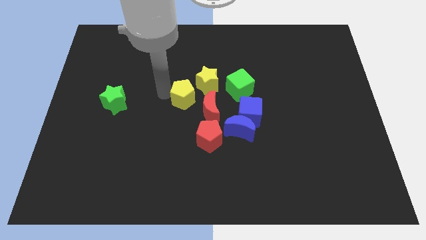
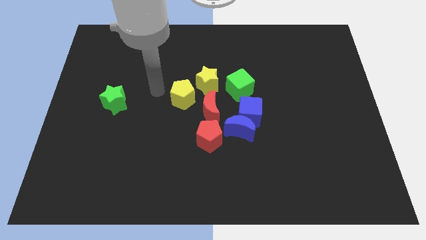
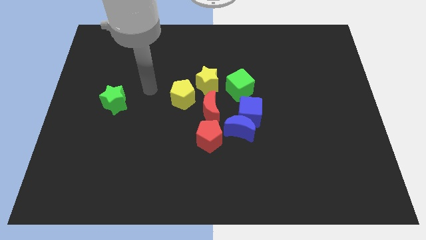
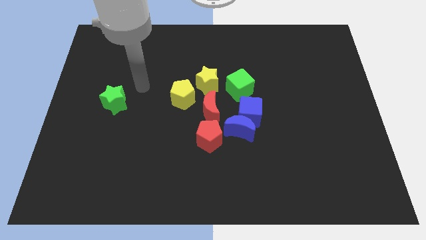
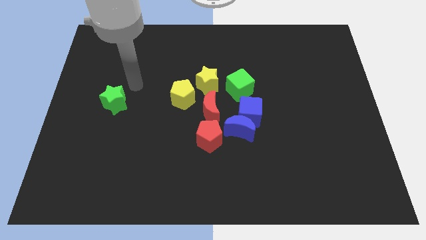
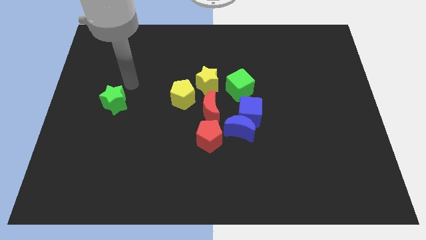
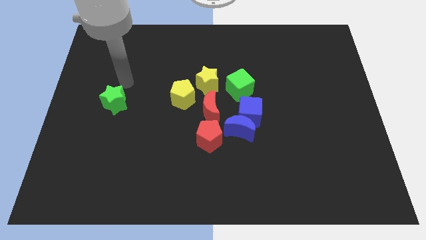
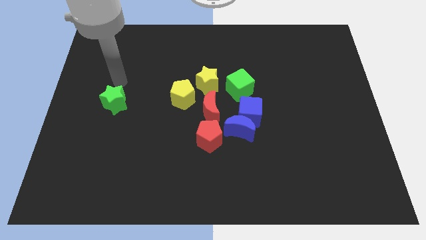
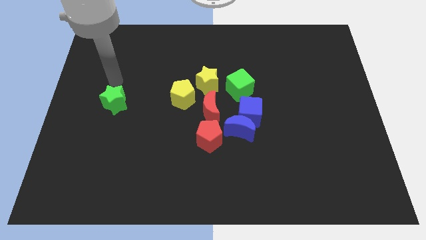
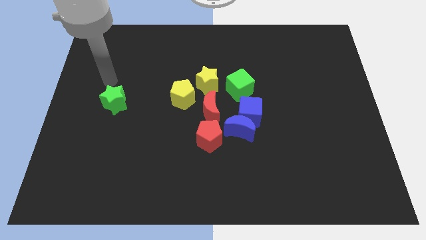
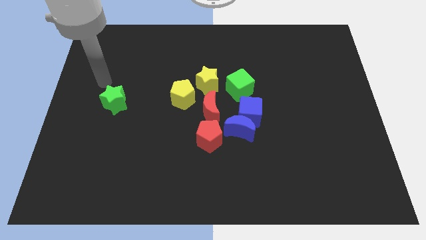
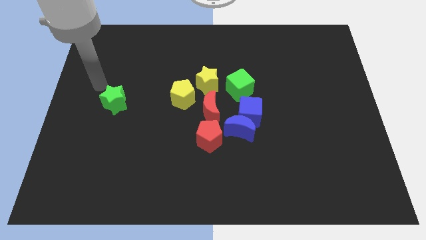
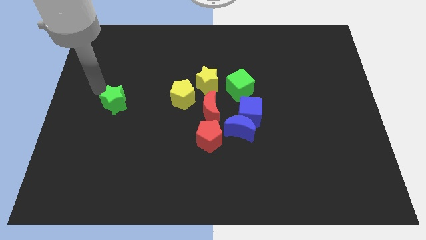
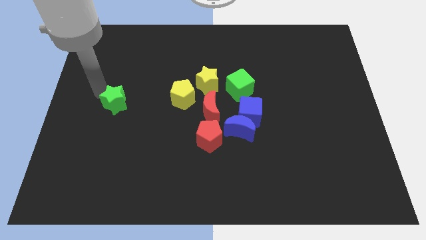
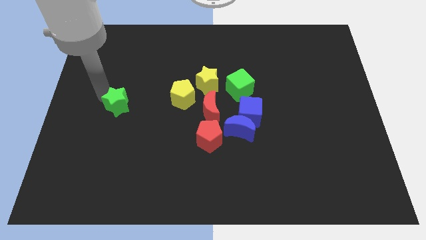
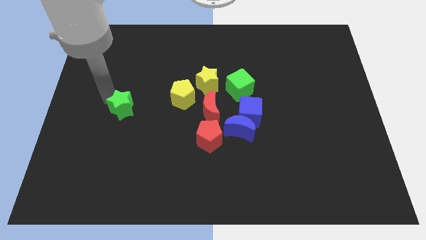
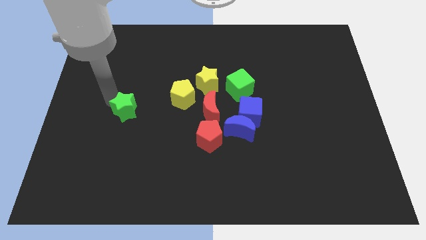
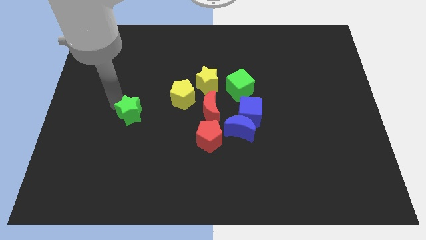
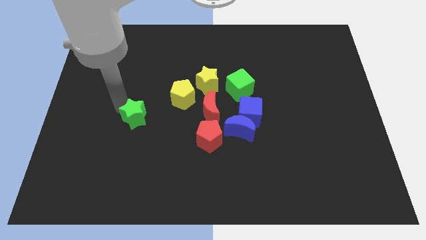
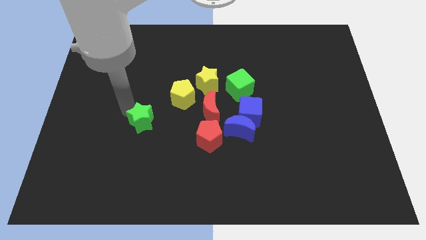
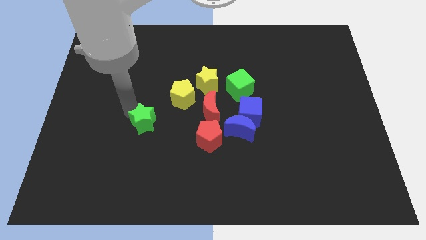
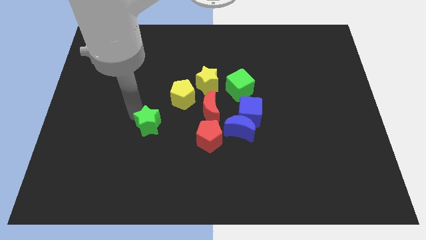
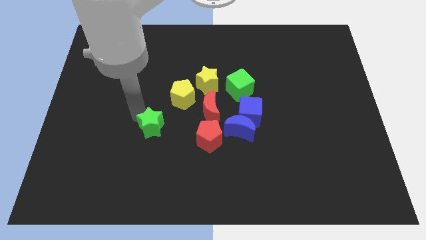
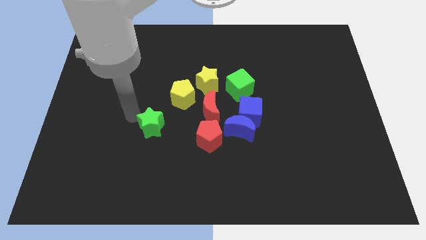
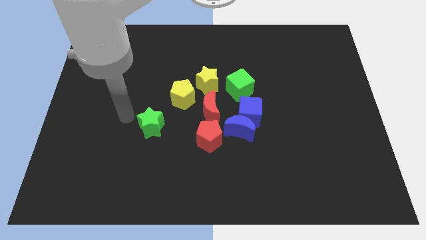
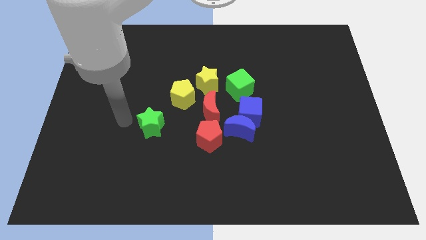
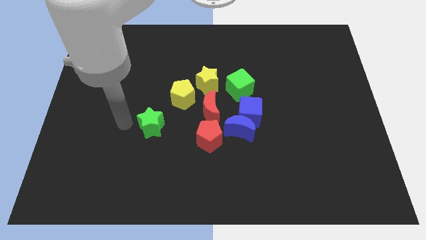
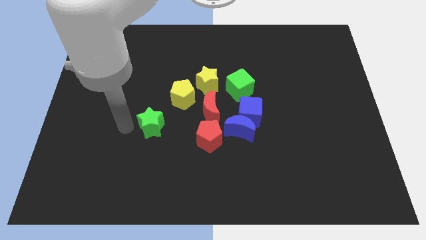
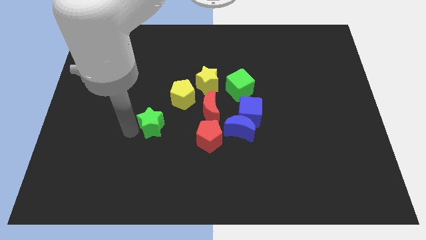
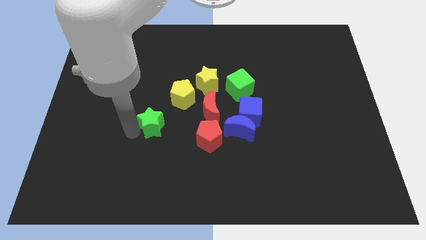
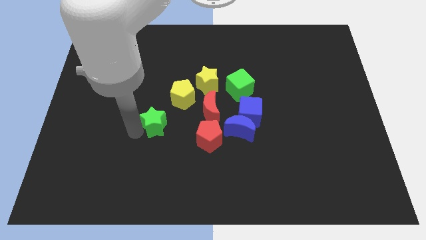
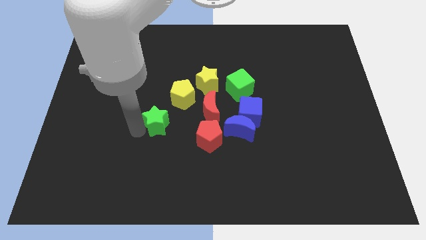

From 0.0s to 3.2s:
move the green star towards the yellow pentagon

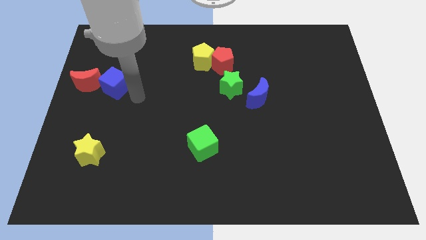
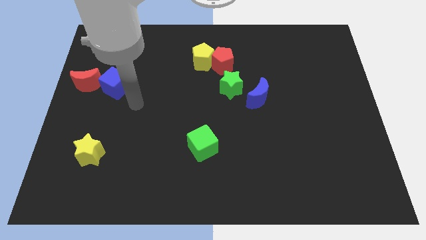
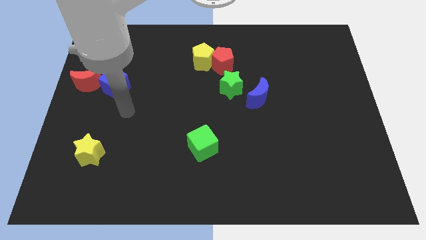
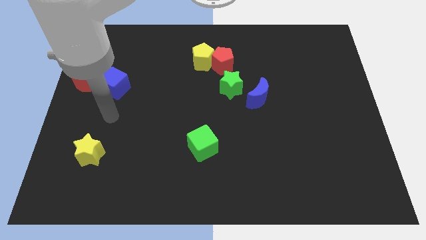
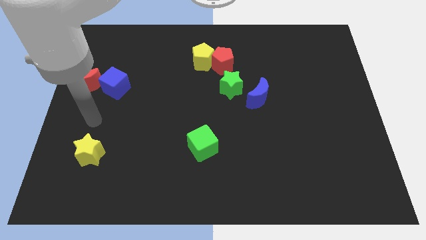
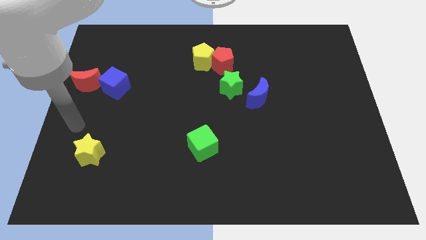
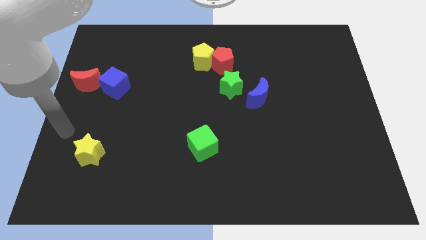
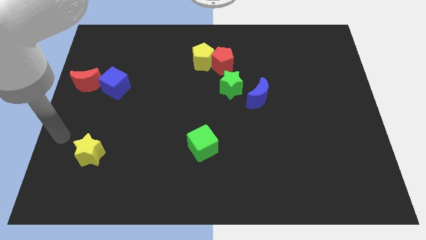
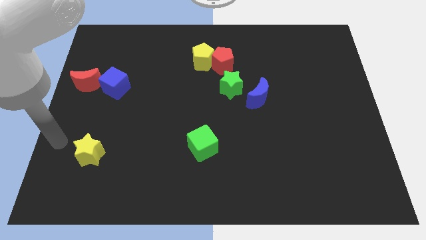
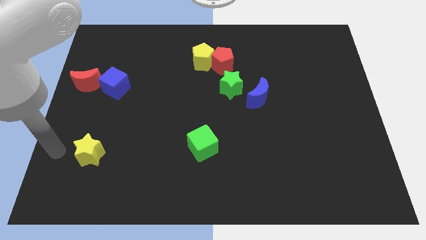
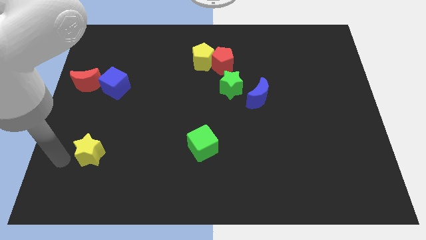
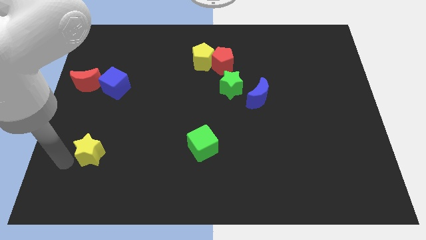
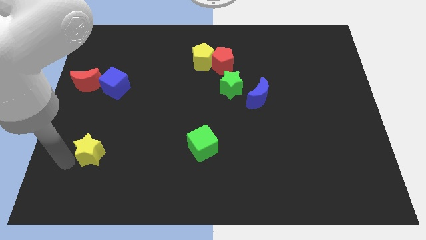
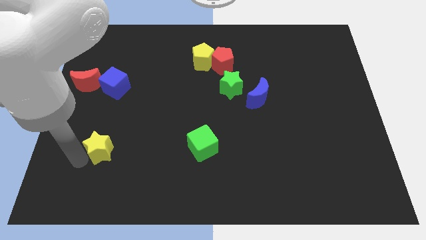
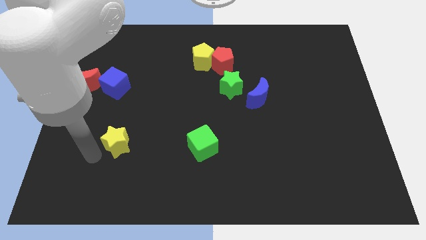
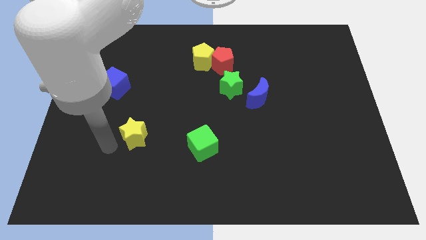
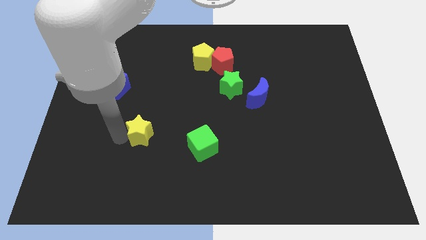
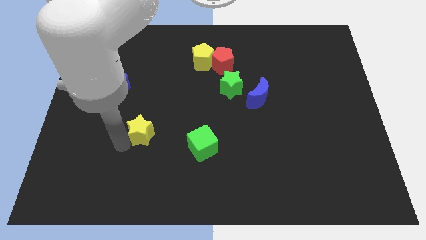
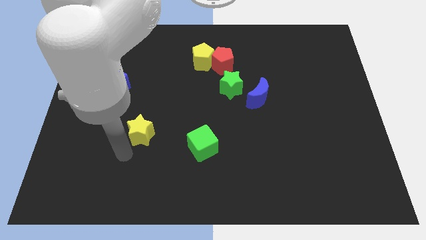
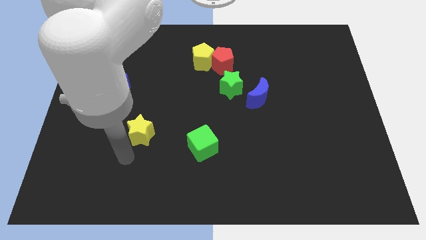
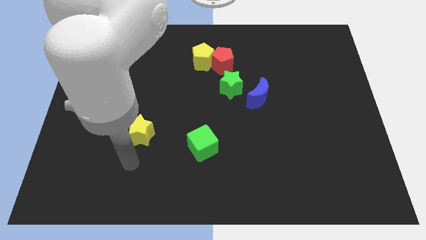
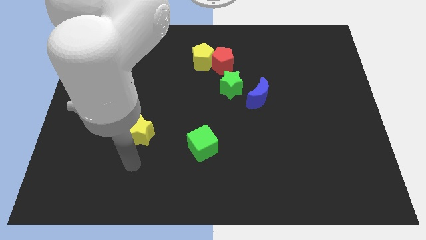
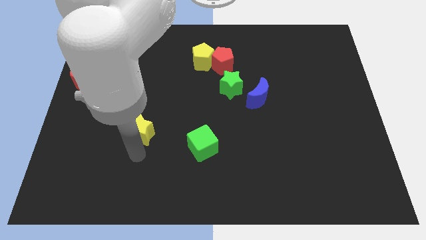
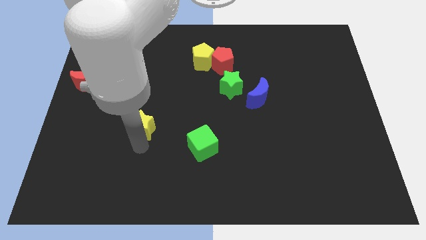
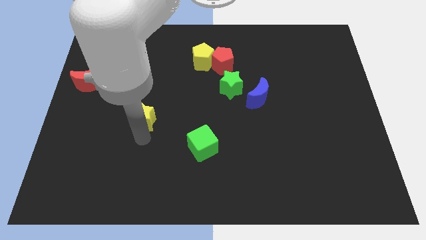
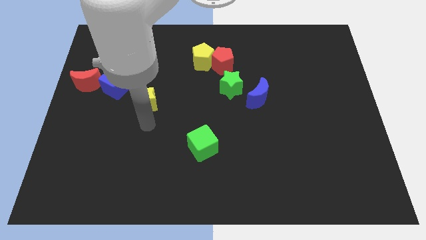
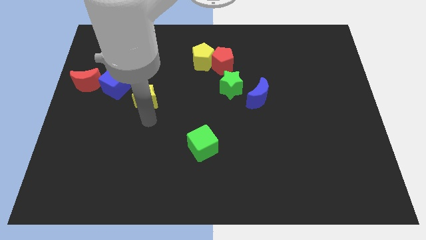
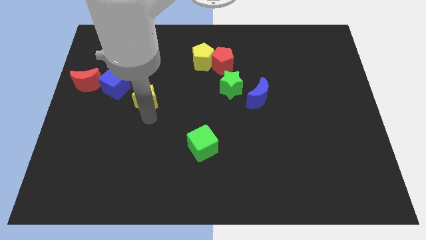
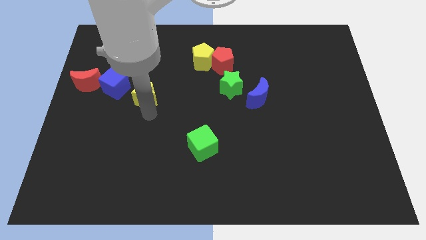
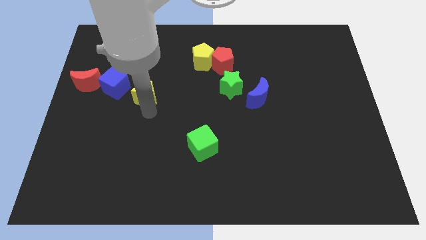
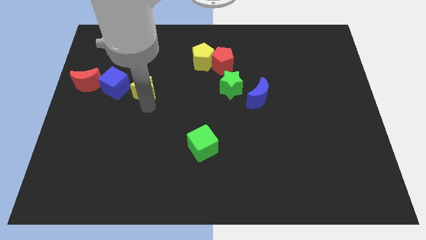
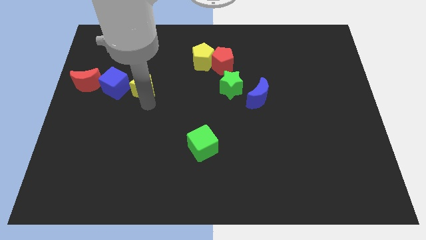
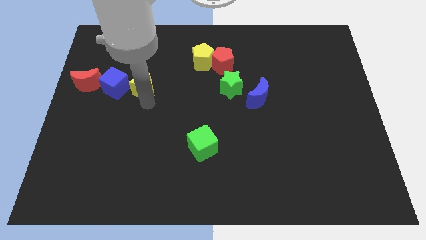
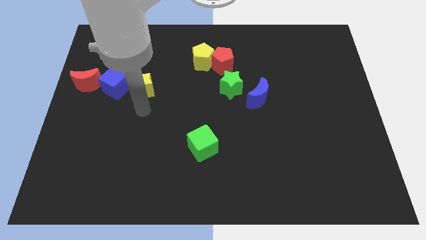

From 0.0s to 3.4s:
place yellow star beside blue cube

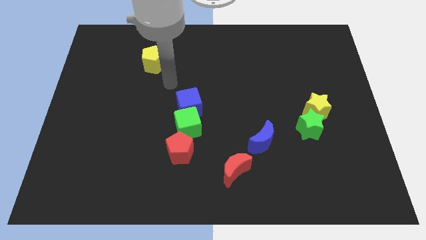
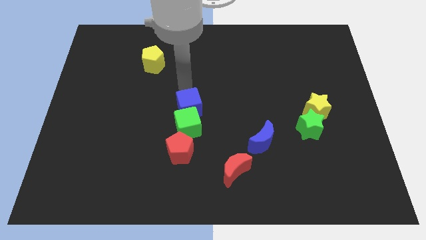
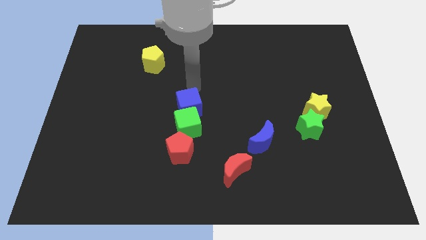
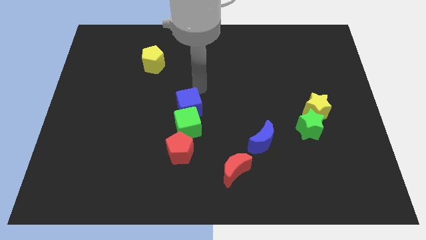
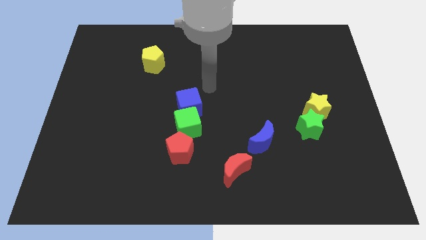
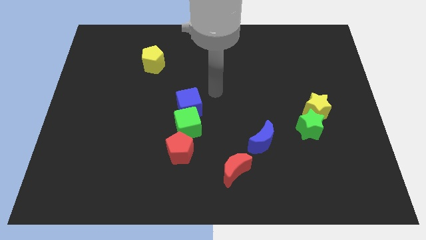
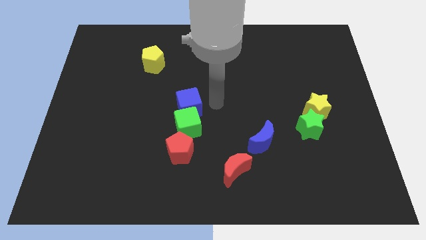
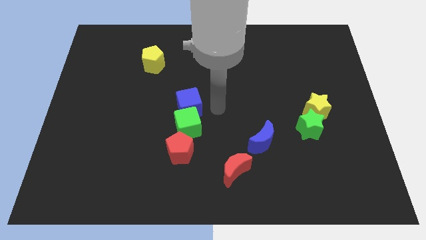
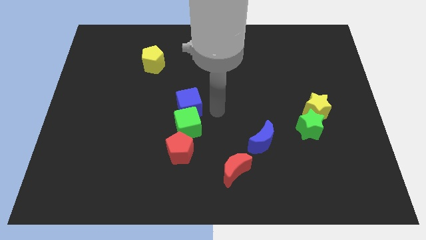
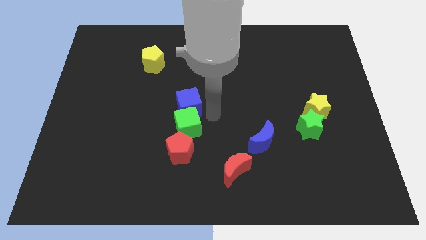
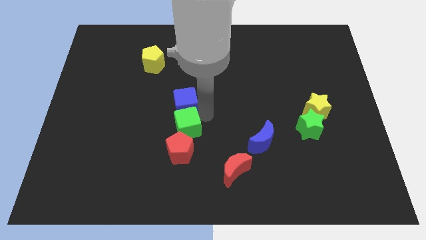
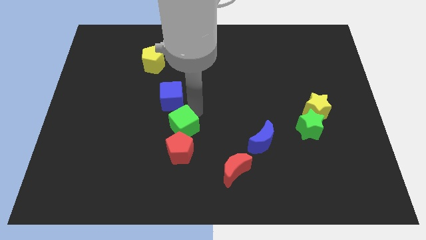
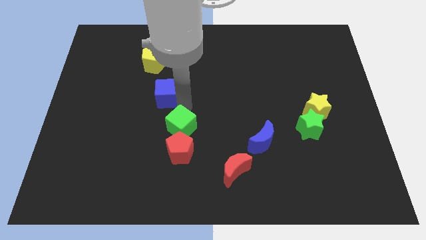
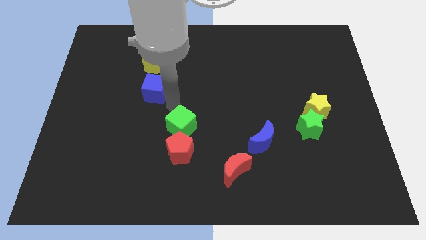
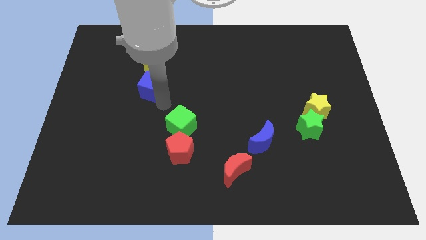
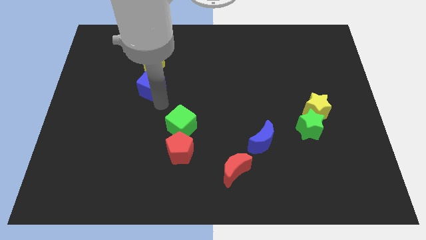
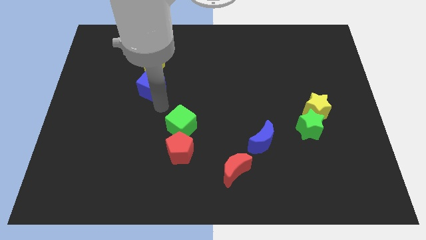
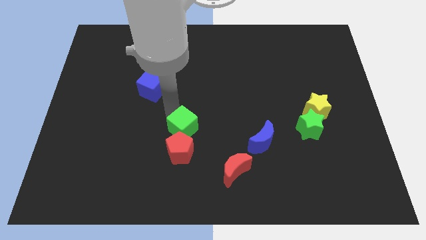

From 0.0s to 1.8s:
separate the blue cube from the green cube

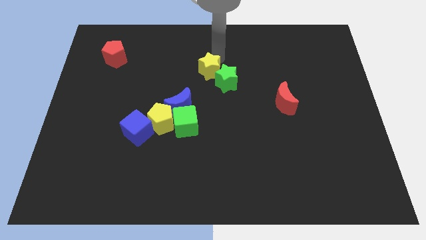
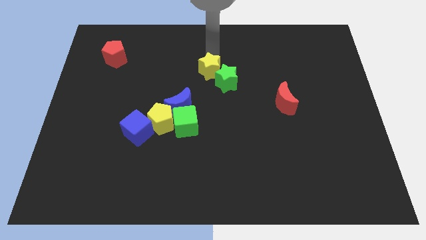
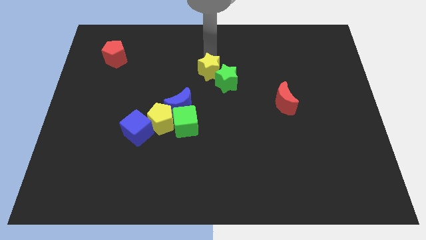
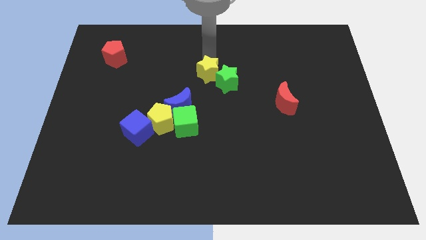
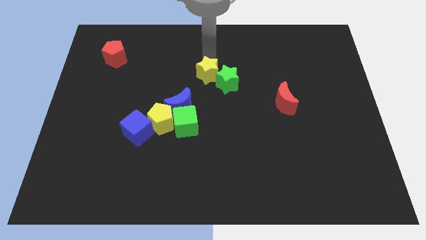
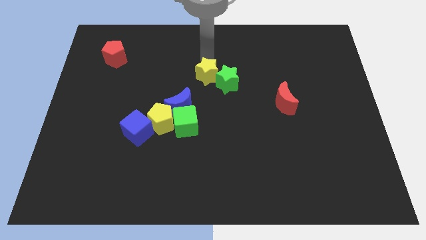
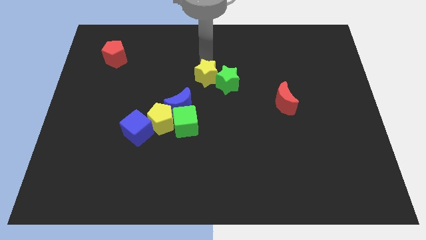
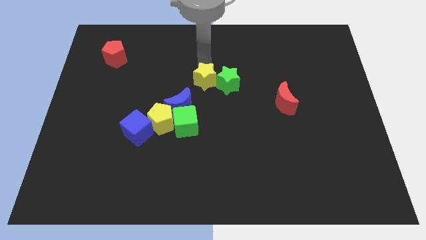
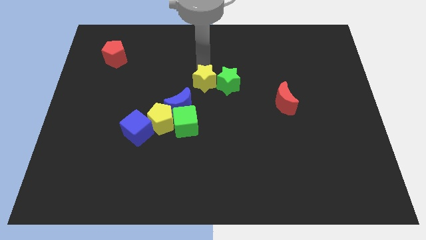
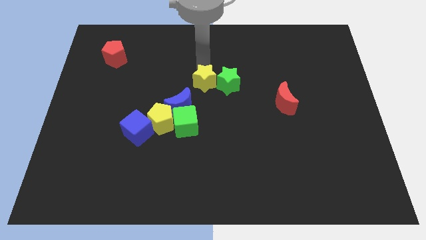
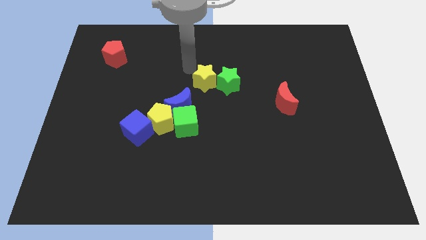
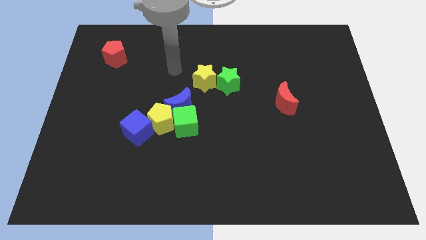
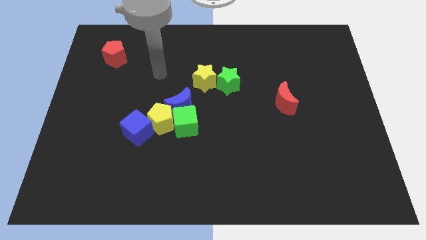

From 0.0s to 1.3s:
place your arm in between the red pentagon and yellow star
